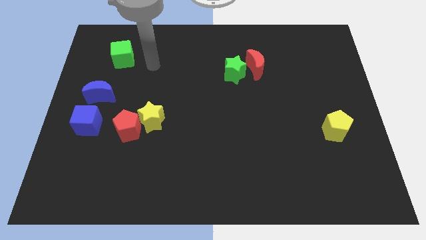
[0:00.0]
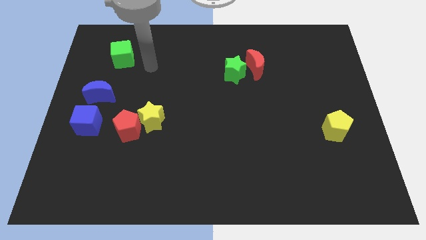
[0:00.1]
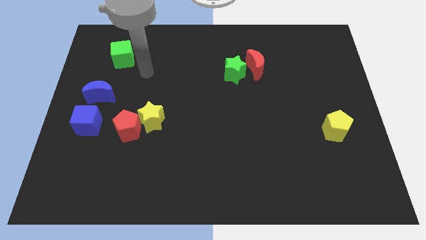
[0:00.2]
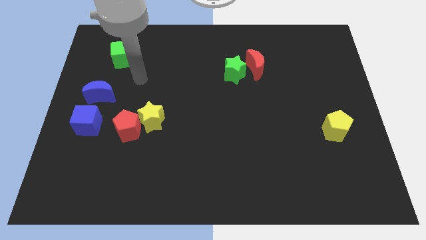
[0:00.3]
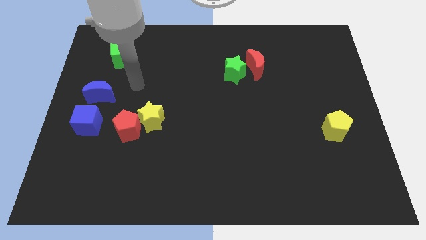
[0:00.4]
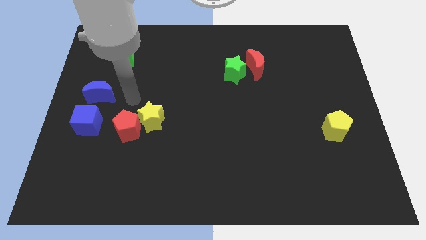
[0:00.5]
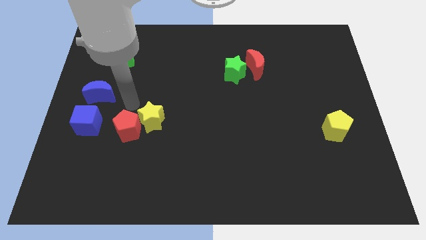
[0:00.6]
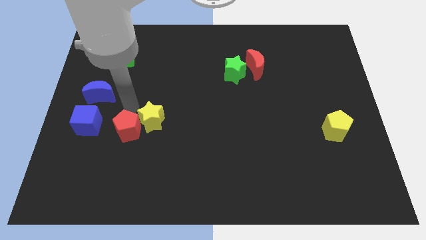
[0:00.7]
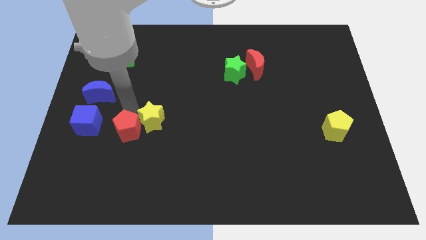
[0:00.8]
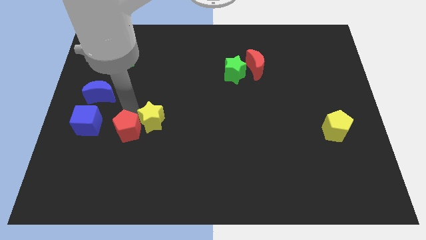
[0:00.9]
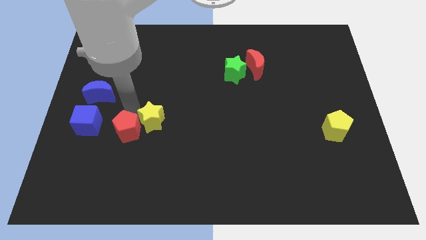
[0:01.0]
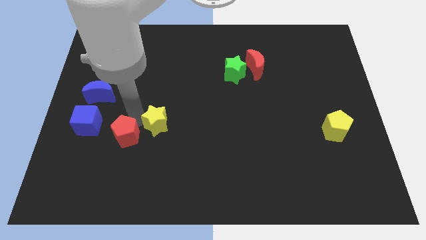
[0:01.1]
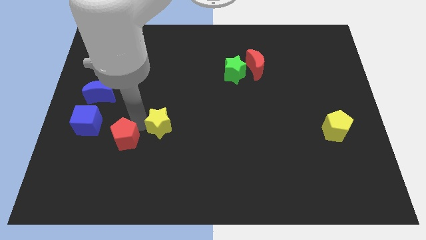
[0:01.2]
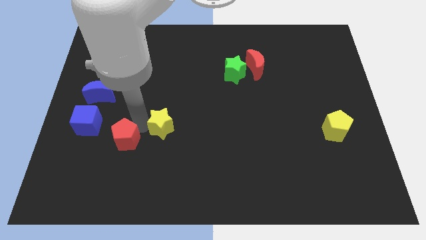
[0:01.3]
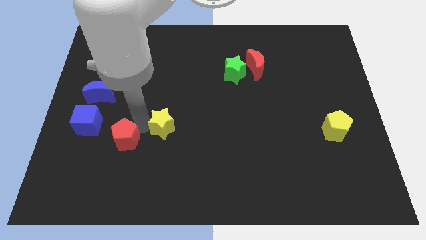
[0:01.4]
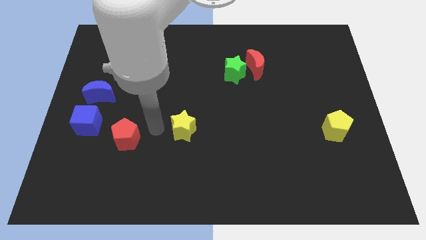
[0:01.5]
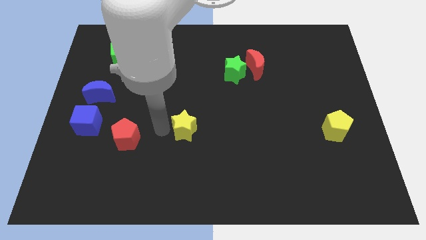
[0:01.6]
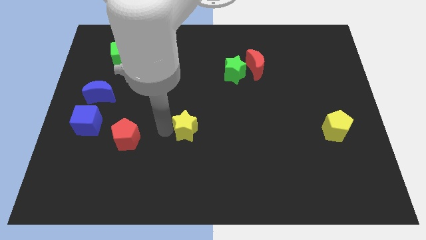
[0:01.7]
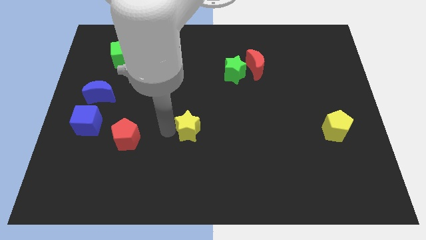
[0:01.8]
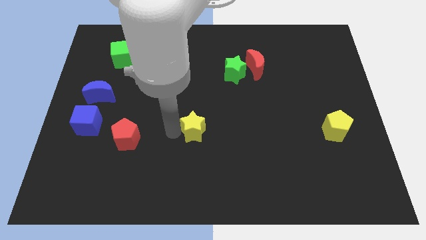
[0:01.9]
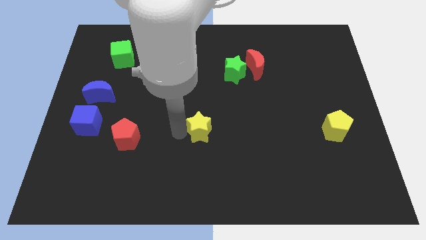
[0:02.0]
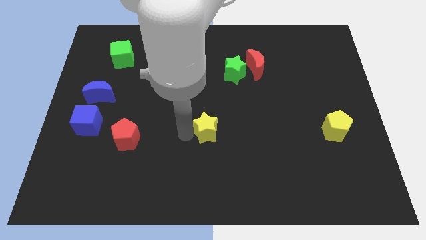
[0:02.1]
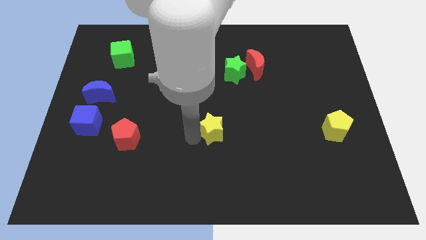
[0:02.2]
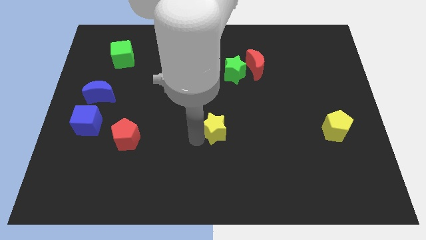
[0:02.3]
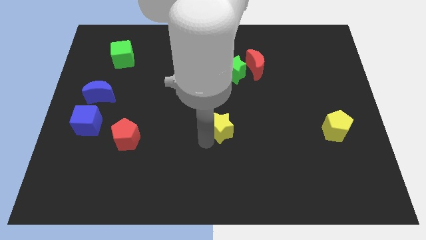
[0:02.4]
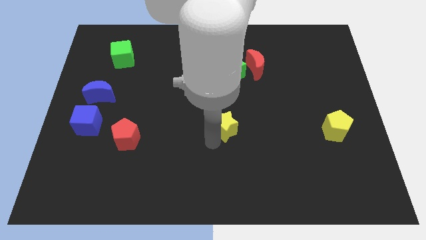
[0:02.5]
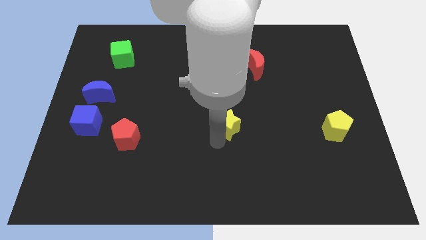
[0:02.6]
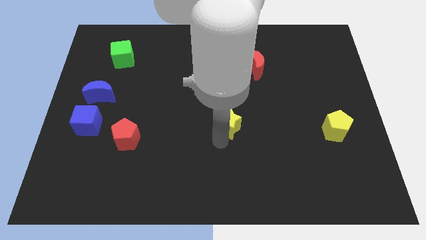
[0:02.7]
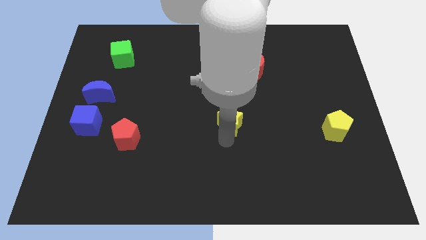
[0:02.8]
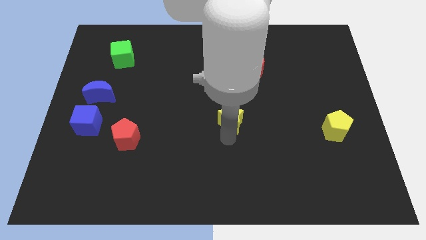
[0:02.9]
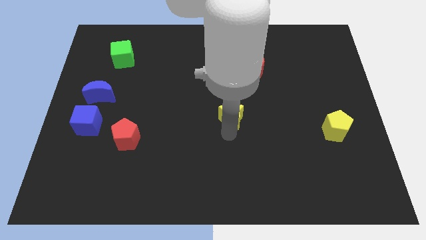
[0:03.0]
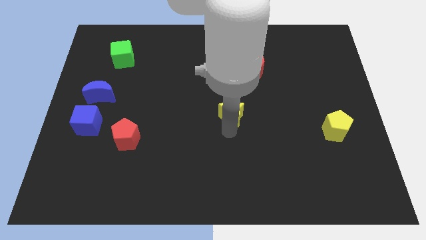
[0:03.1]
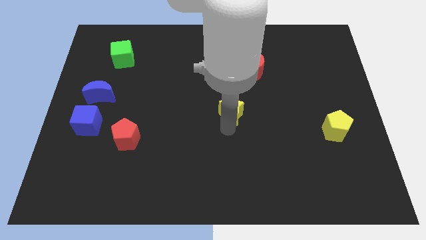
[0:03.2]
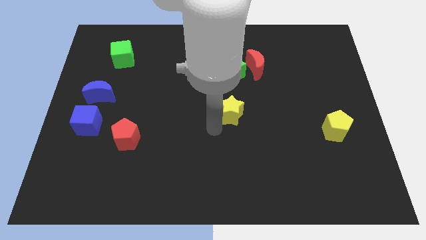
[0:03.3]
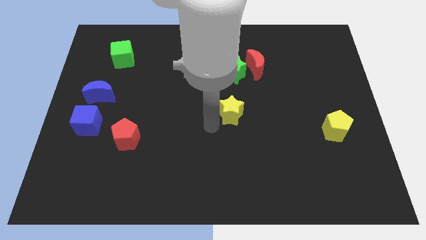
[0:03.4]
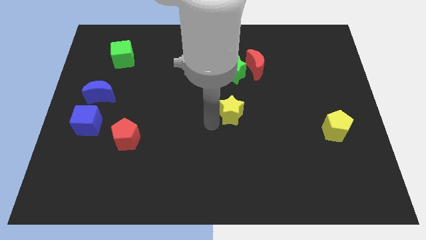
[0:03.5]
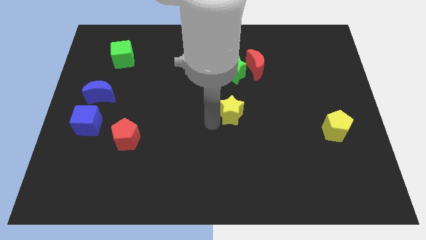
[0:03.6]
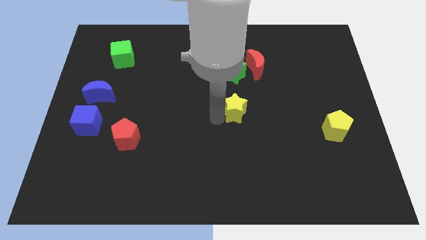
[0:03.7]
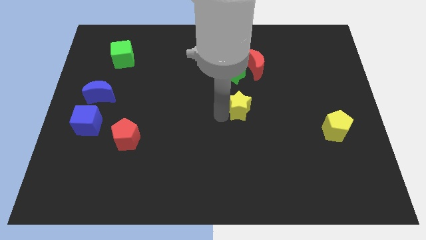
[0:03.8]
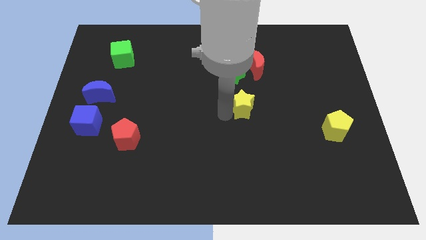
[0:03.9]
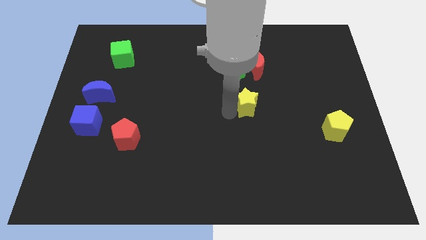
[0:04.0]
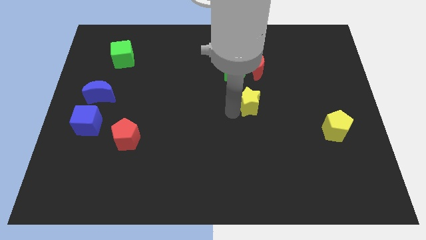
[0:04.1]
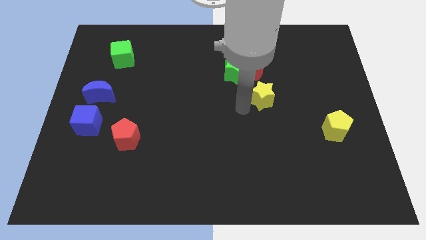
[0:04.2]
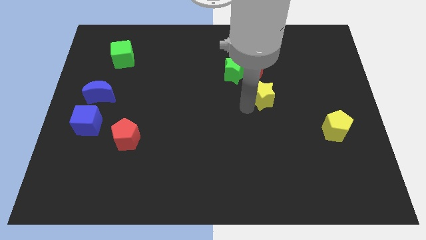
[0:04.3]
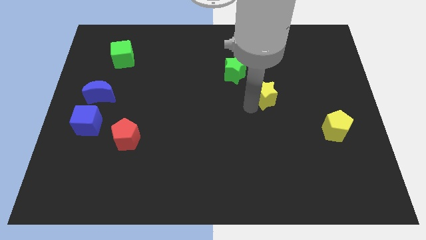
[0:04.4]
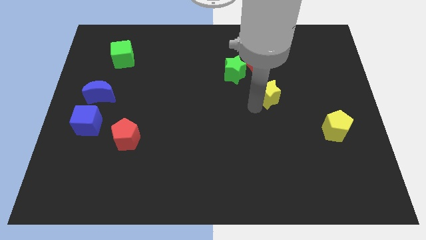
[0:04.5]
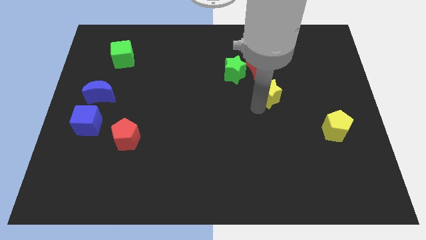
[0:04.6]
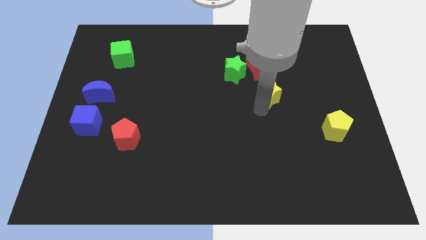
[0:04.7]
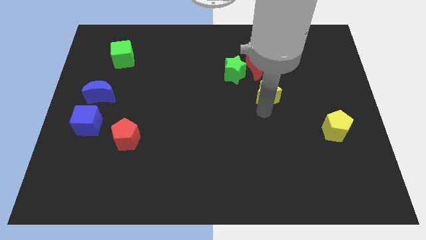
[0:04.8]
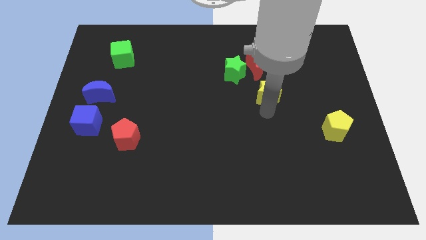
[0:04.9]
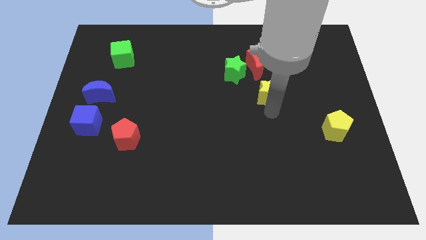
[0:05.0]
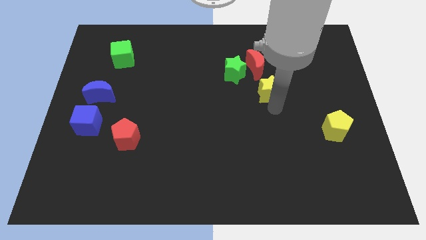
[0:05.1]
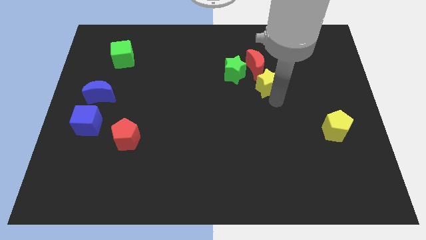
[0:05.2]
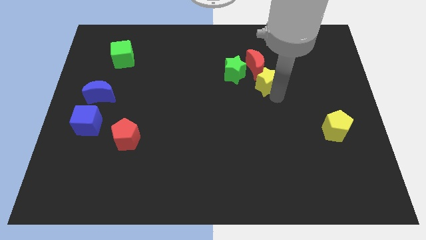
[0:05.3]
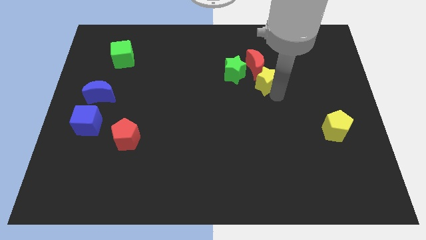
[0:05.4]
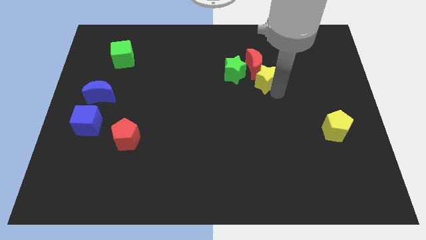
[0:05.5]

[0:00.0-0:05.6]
slide the yellow star next to the red moon

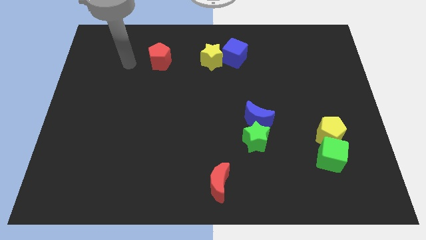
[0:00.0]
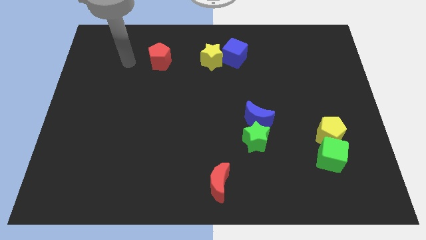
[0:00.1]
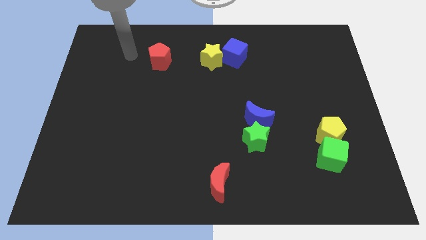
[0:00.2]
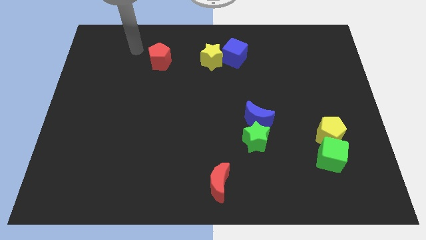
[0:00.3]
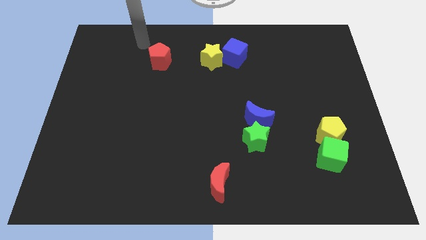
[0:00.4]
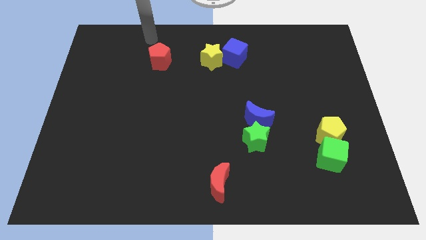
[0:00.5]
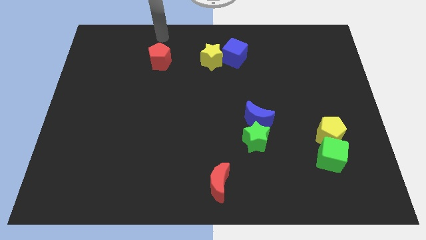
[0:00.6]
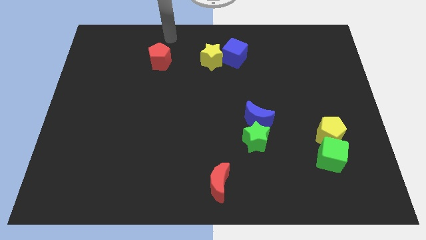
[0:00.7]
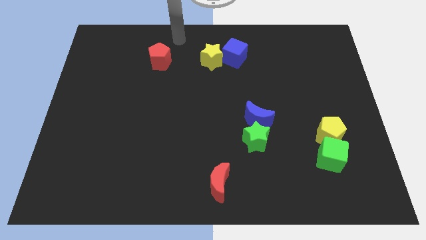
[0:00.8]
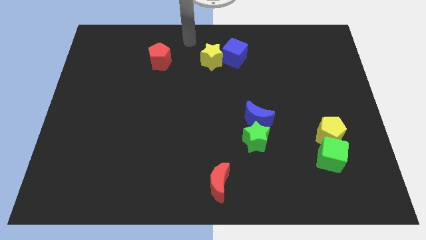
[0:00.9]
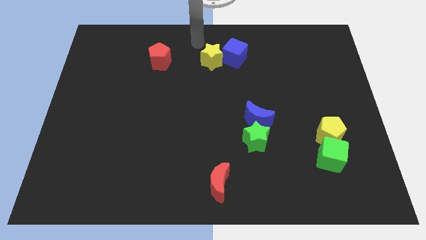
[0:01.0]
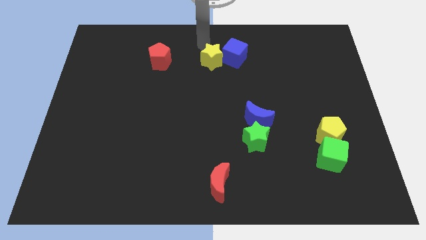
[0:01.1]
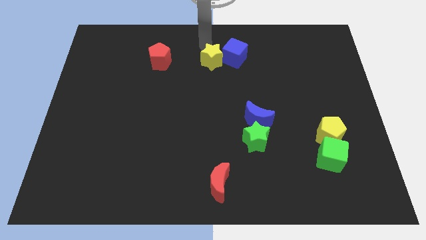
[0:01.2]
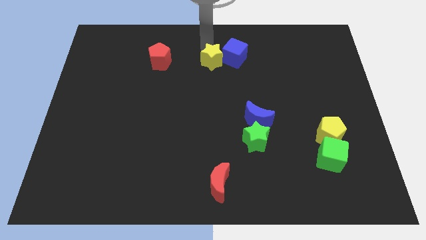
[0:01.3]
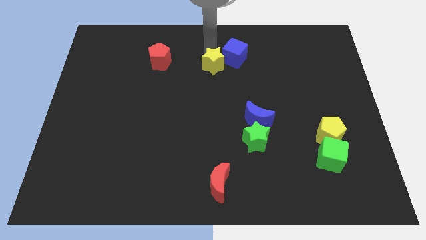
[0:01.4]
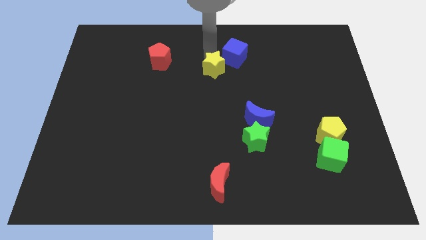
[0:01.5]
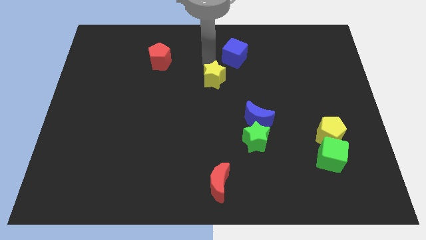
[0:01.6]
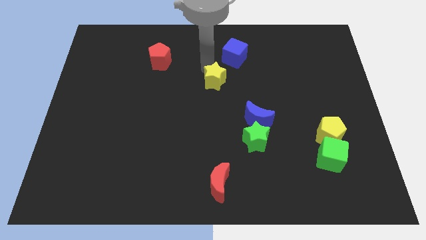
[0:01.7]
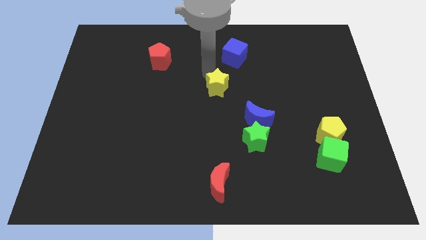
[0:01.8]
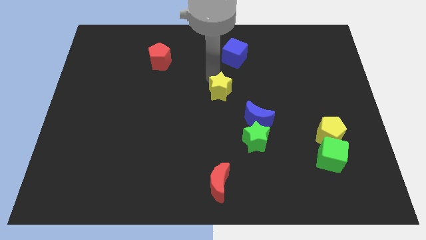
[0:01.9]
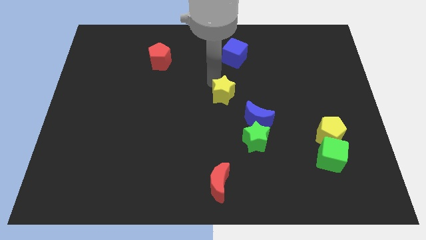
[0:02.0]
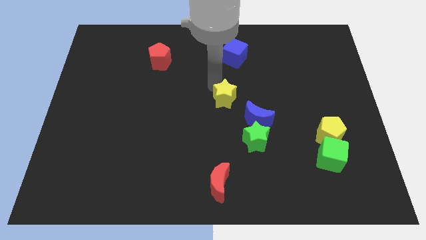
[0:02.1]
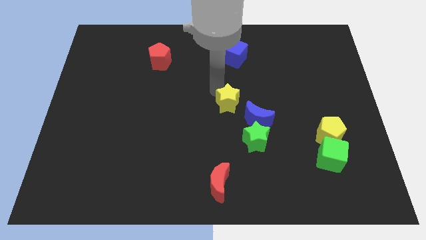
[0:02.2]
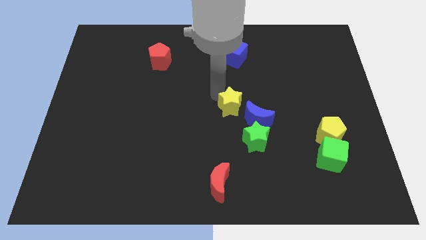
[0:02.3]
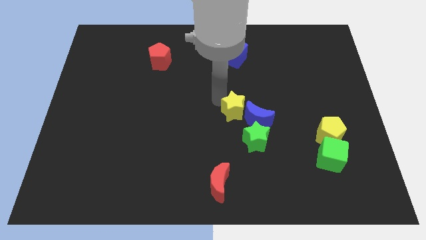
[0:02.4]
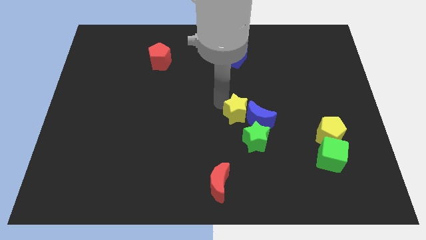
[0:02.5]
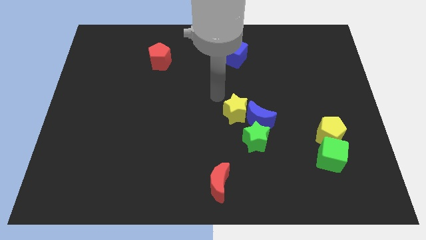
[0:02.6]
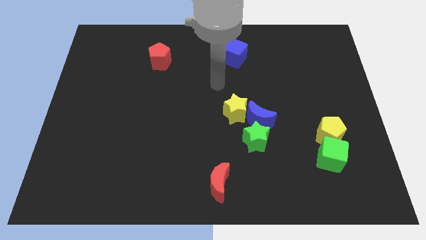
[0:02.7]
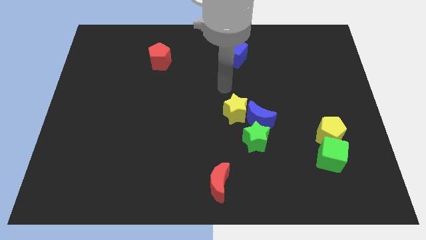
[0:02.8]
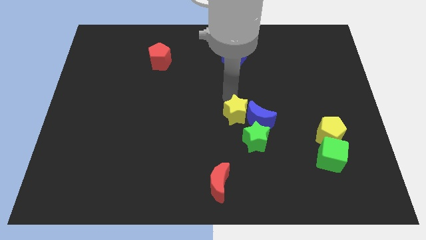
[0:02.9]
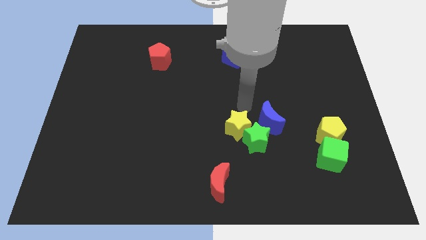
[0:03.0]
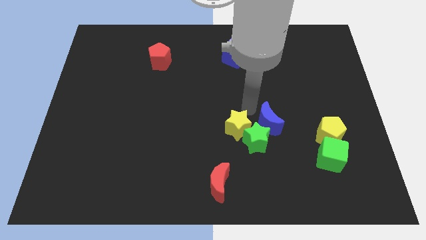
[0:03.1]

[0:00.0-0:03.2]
move the yellow star close to the green star
